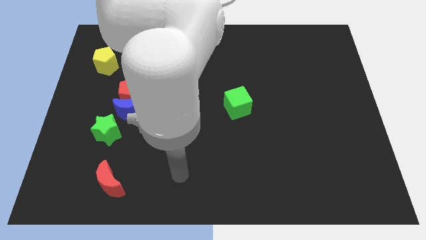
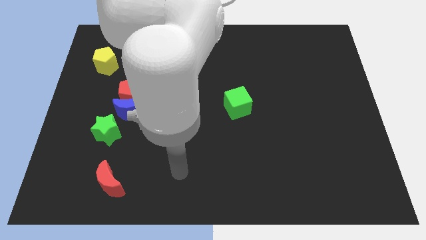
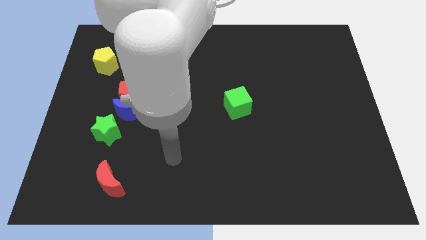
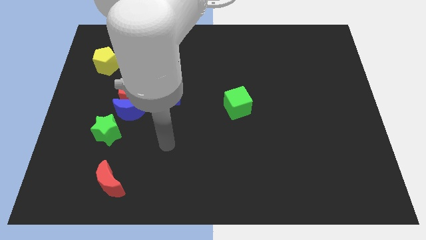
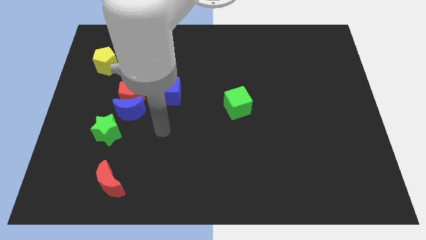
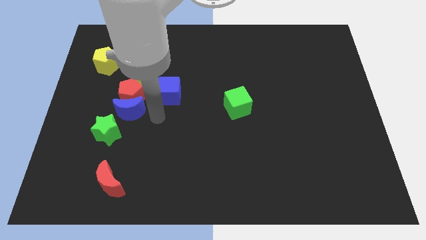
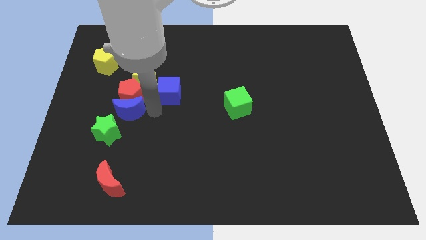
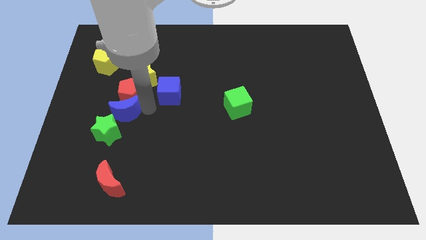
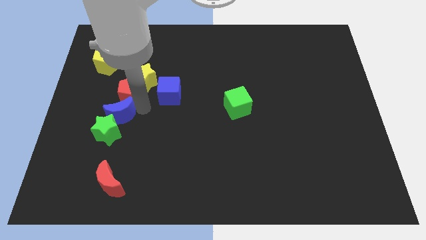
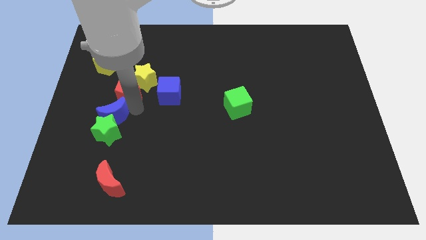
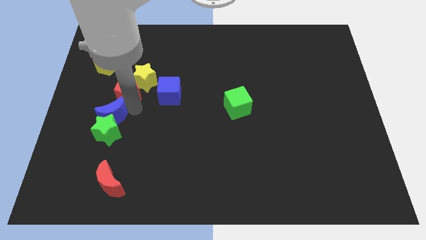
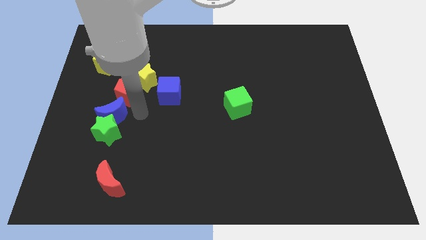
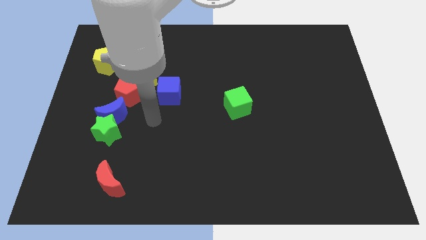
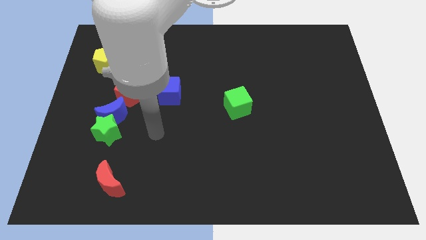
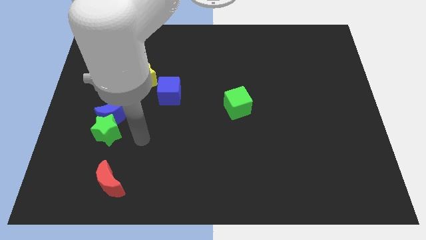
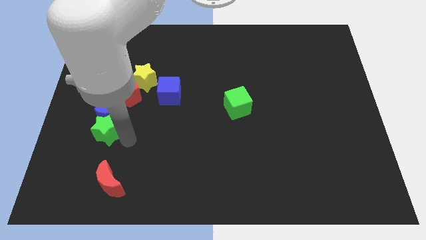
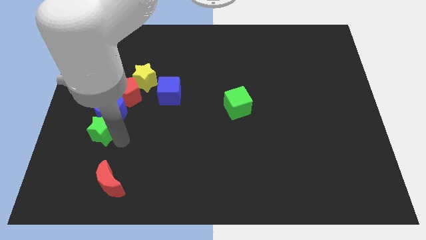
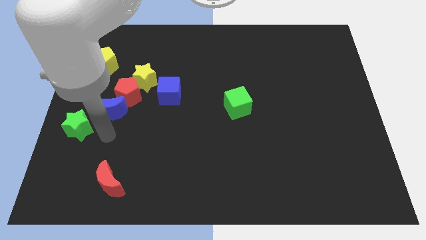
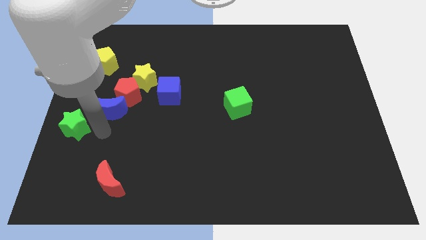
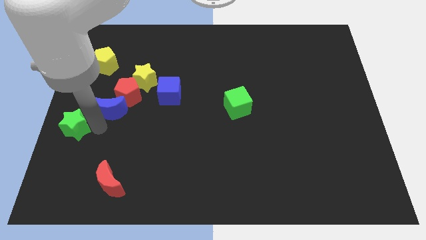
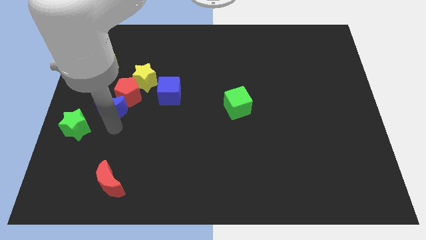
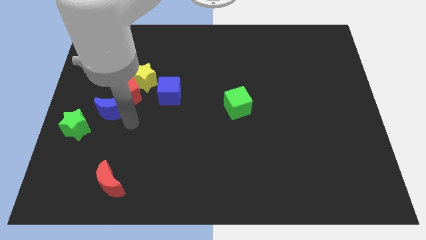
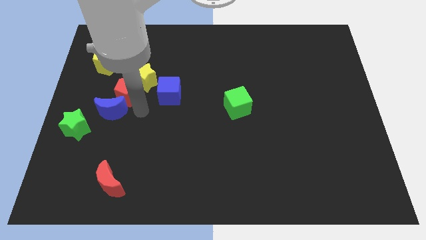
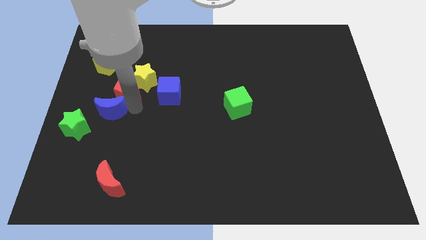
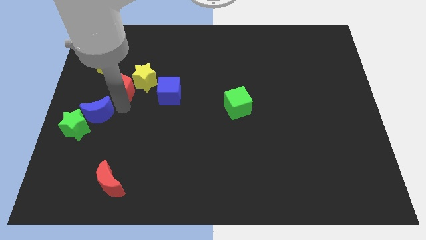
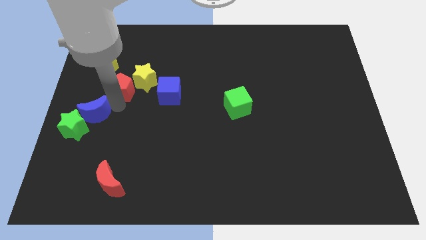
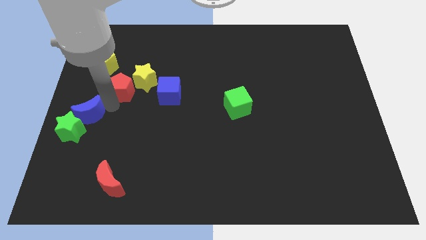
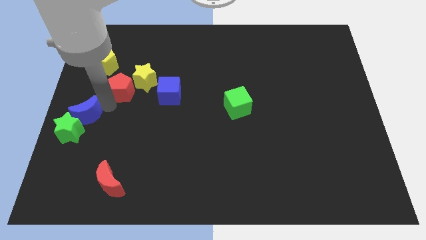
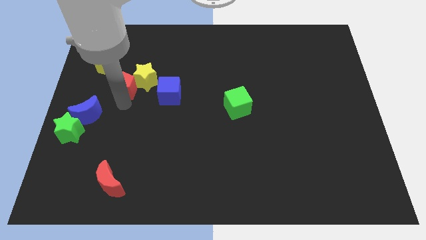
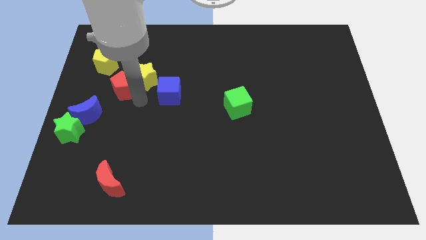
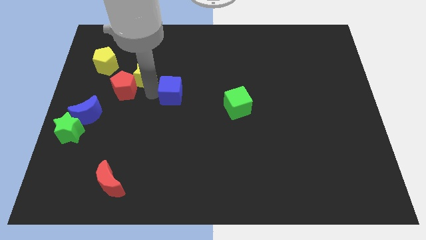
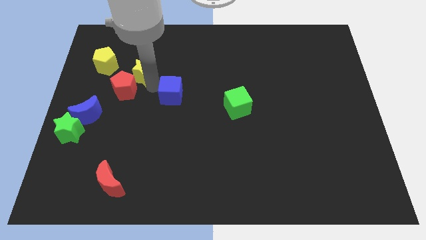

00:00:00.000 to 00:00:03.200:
push the green star and blue moon to the left side of the board

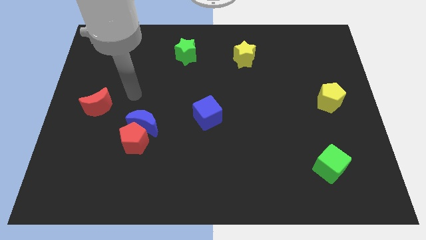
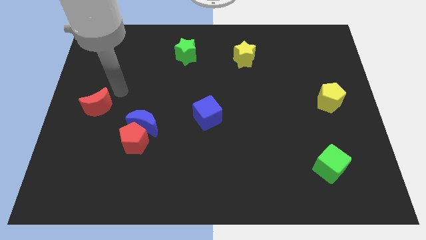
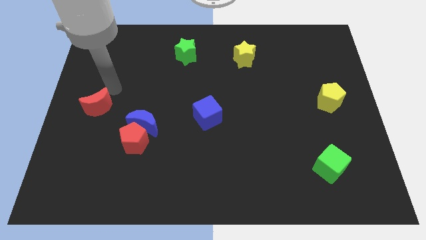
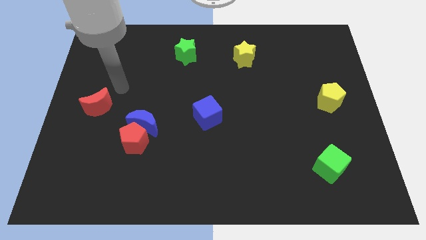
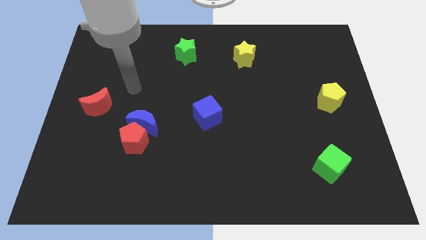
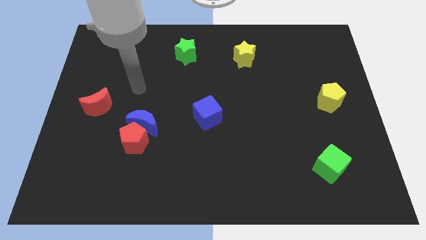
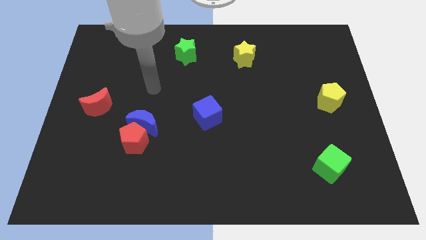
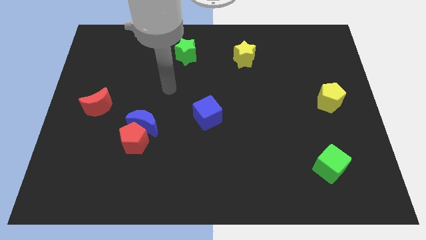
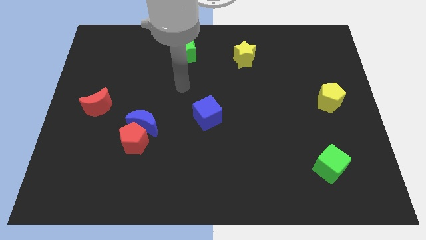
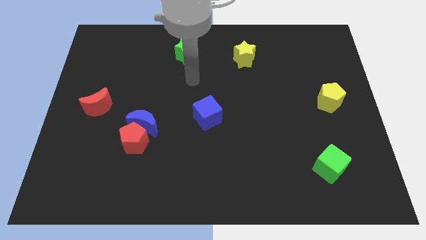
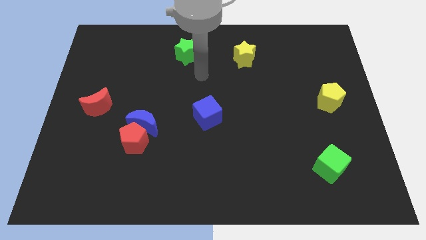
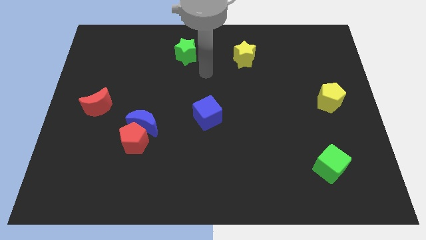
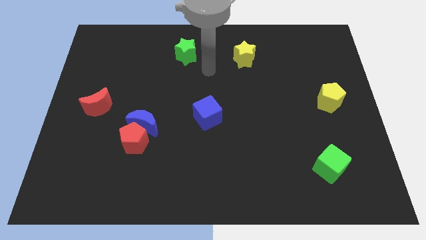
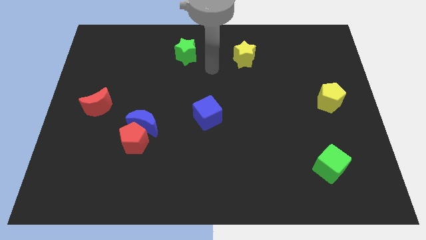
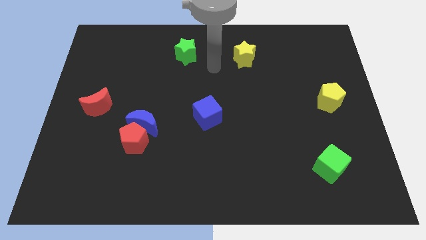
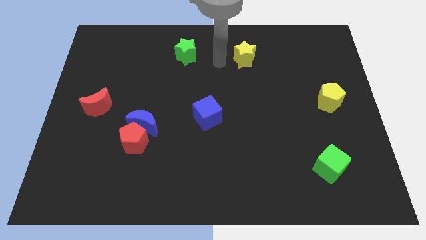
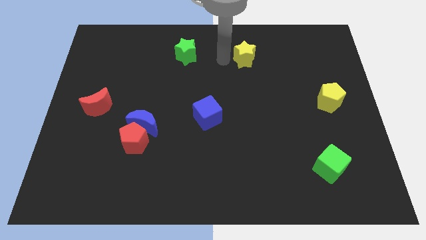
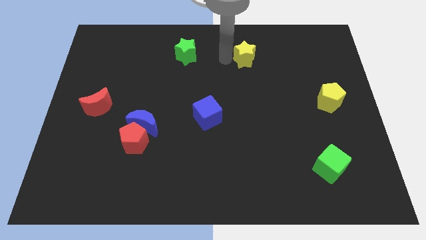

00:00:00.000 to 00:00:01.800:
place your arm in between green star and yellow star

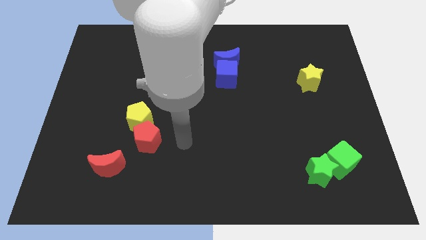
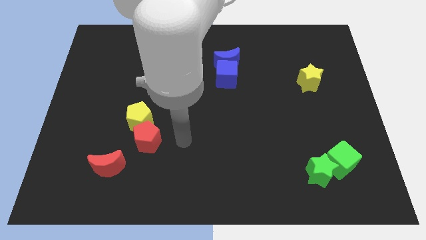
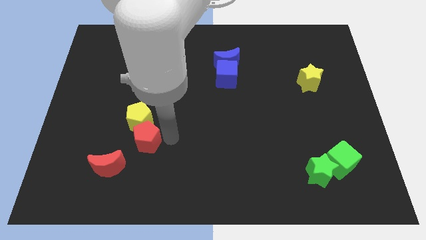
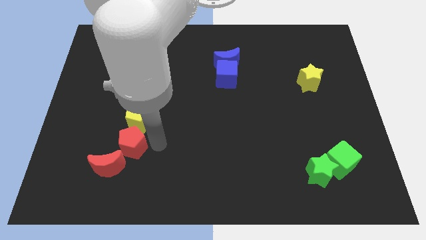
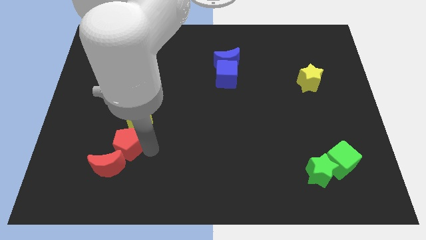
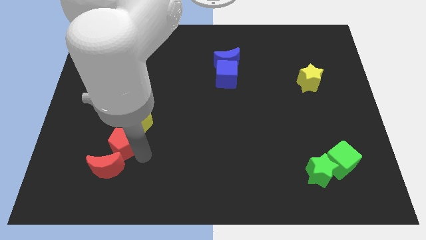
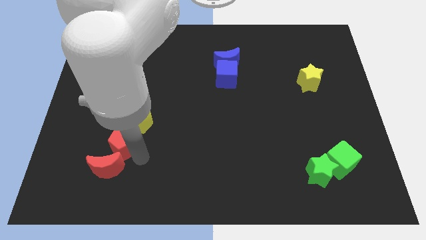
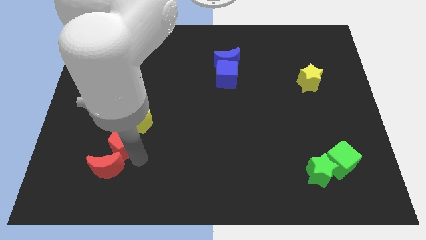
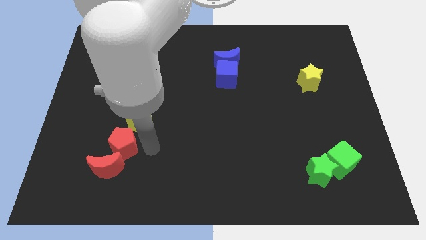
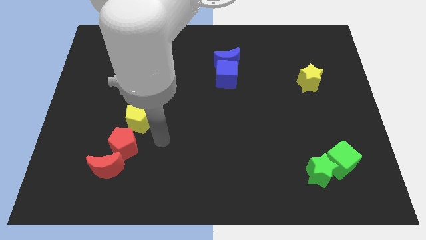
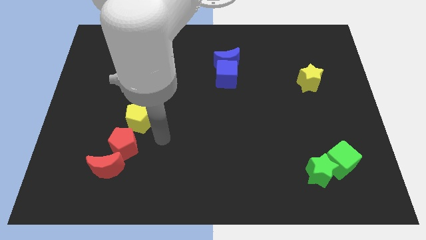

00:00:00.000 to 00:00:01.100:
push red pentagon in to red moon

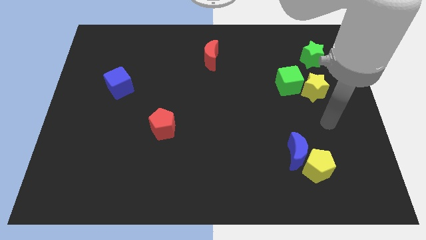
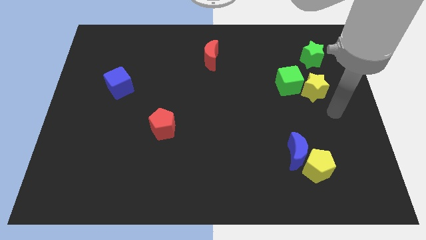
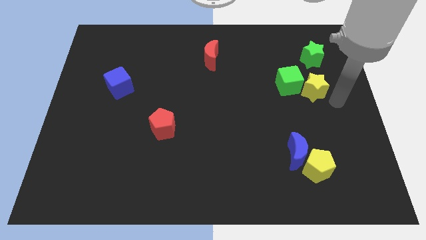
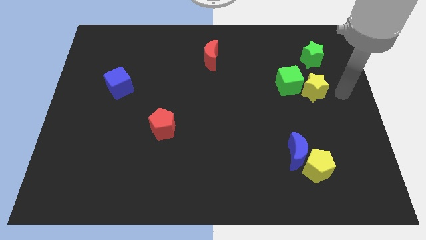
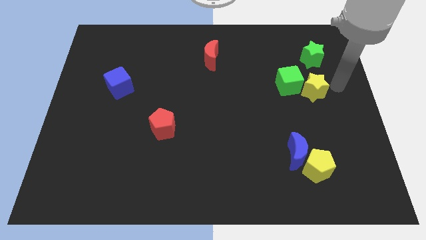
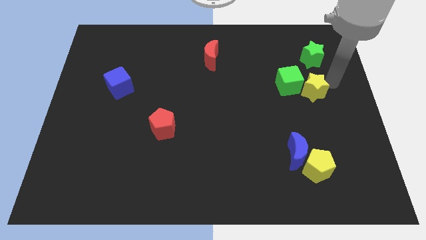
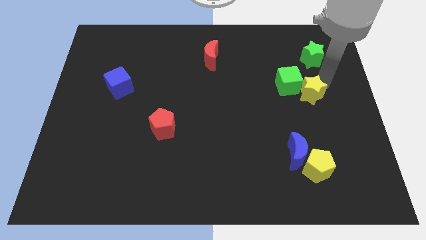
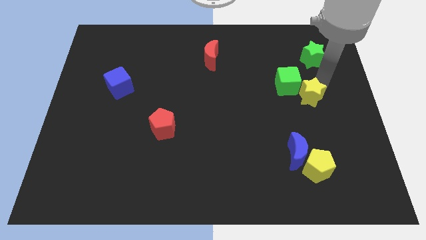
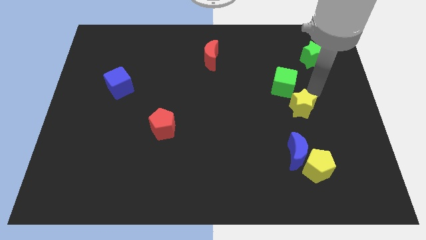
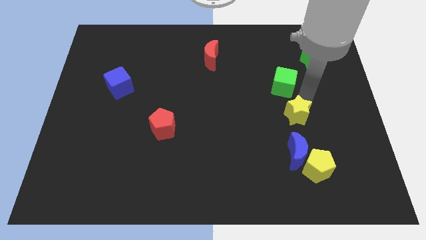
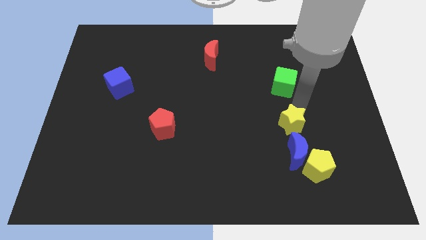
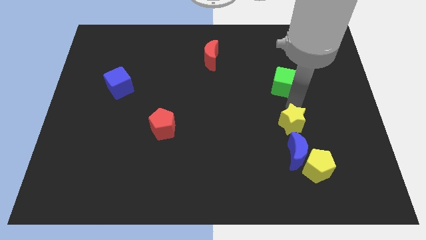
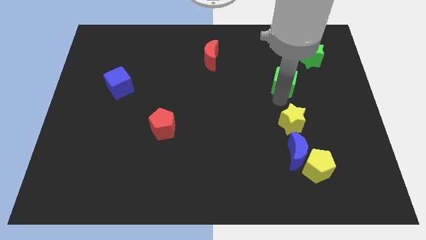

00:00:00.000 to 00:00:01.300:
slide the yellow star close to the blue moon

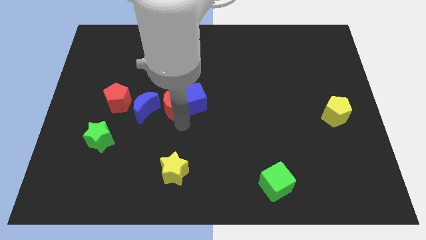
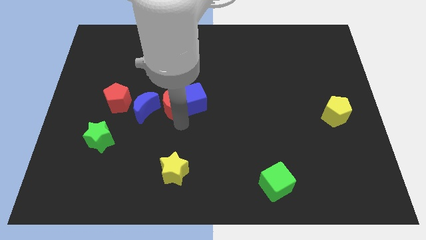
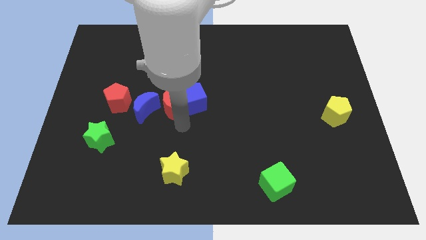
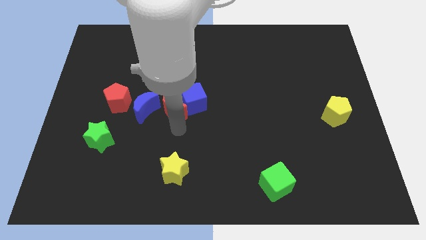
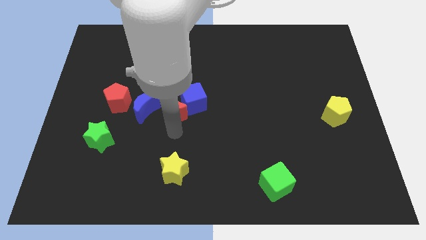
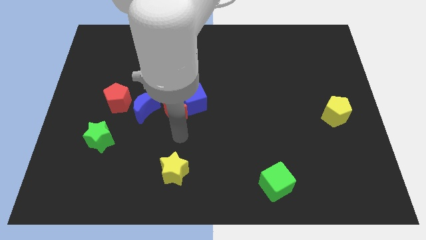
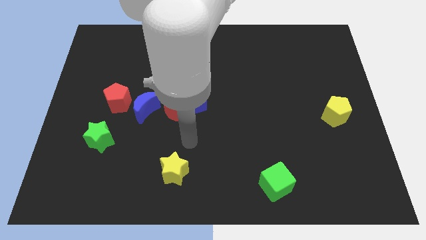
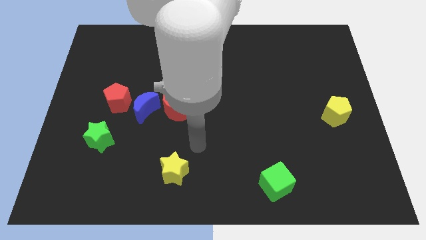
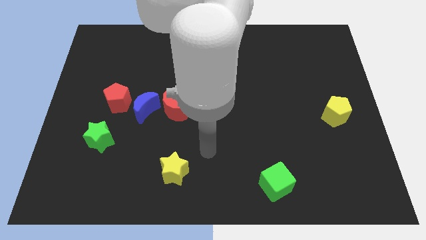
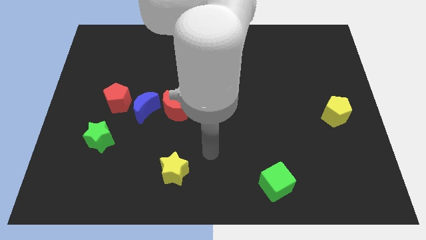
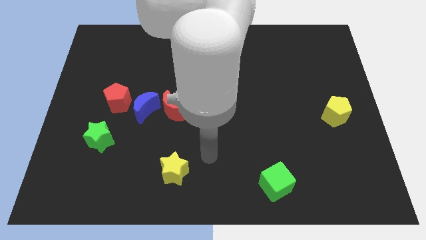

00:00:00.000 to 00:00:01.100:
slide the red crescent parallel to the top of the yellow star

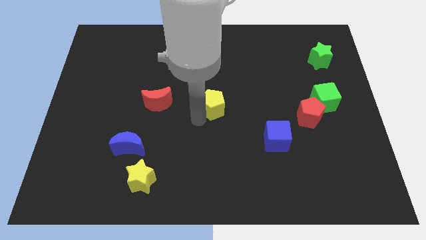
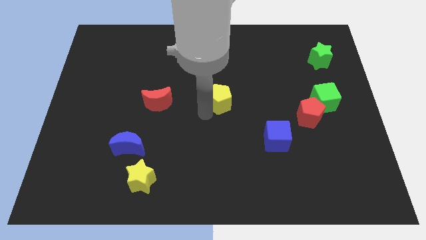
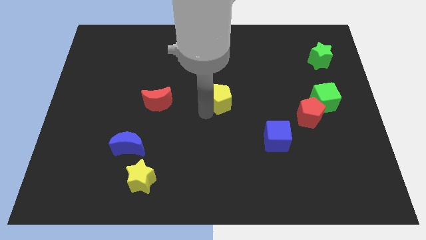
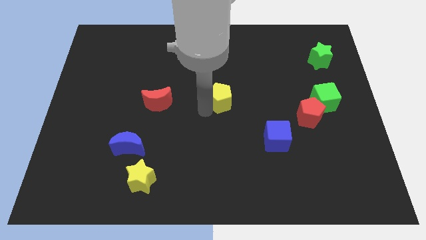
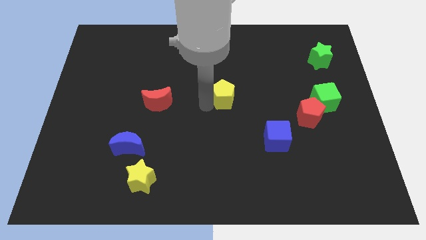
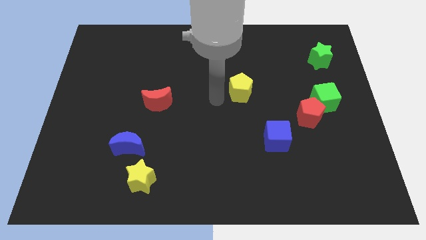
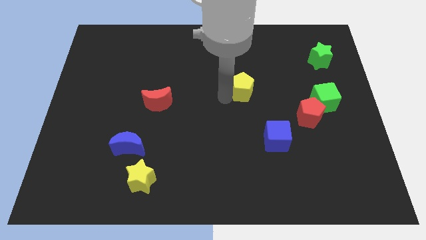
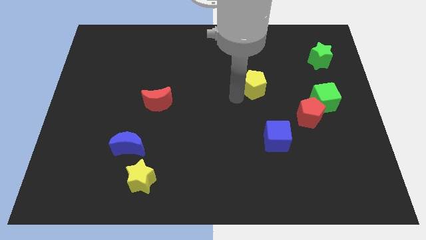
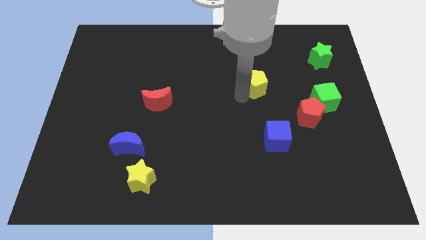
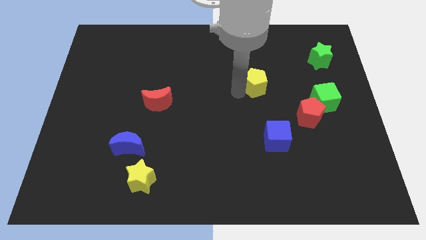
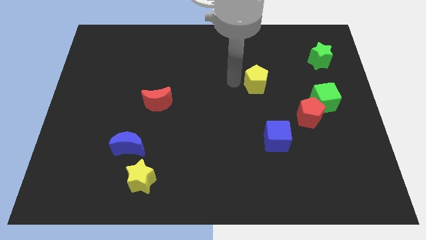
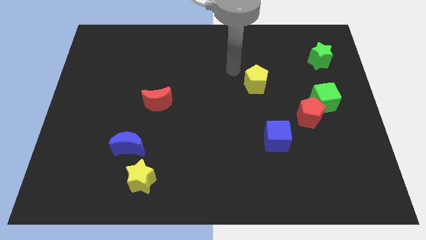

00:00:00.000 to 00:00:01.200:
slide the yellow pentagon diagonally to the top of the blue cube
